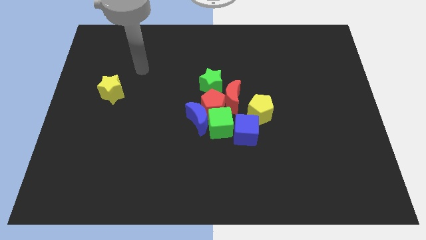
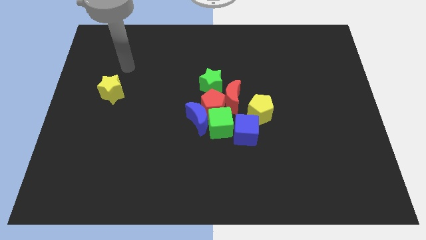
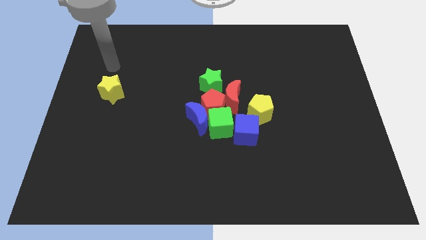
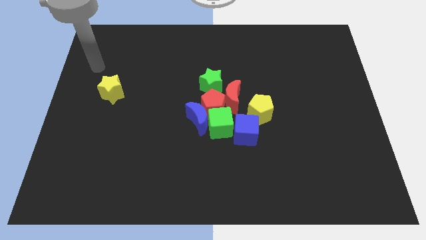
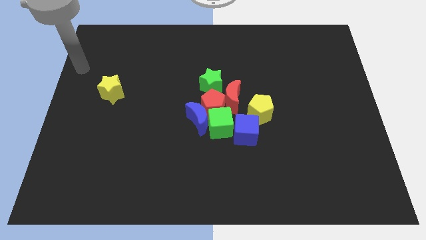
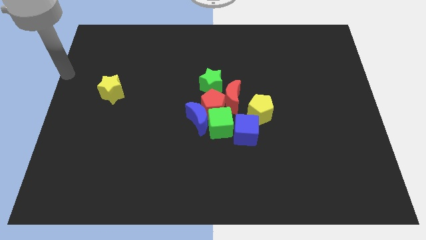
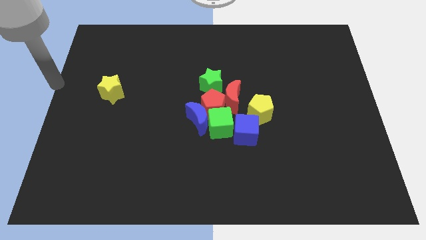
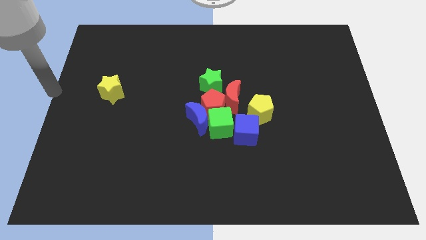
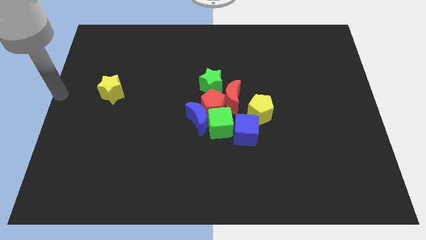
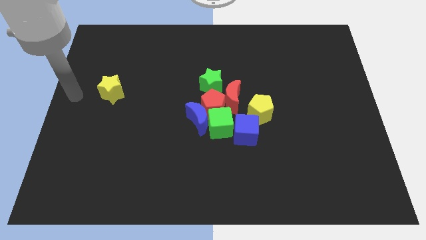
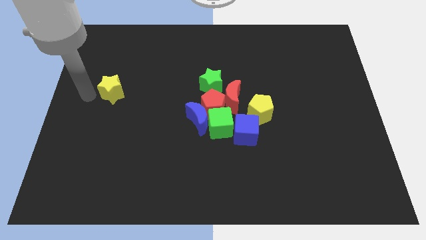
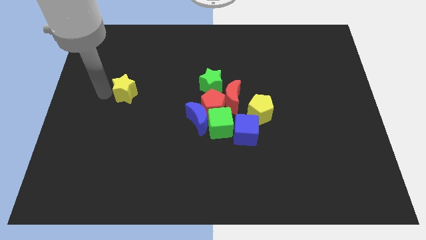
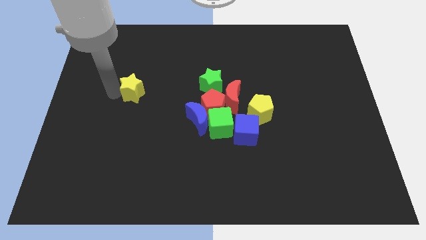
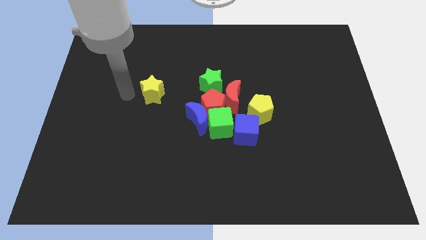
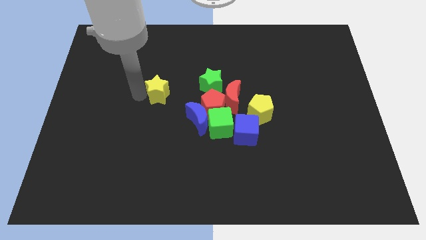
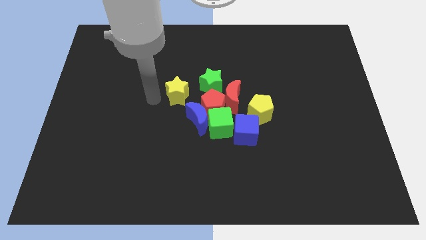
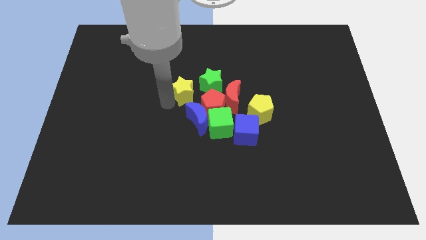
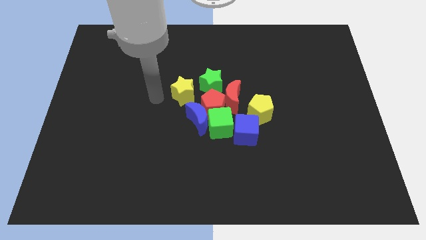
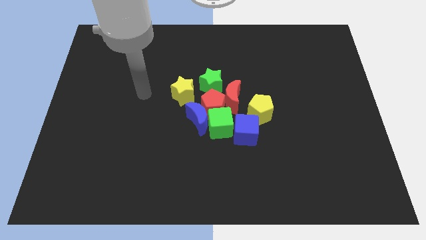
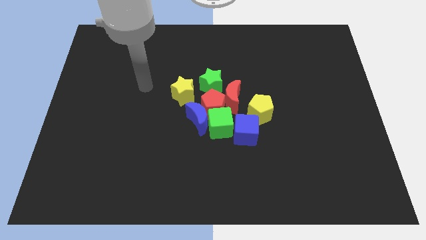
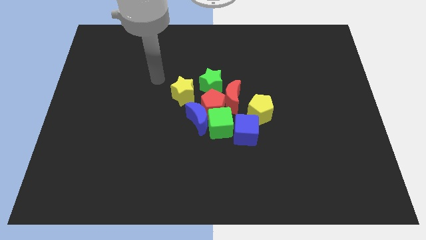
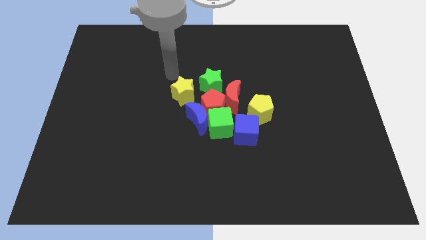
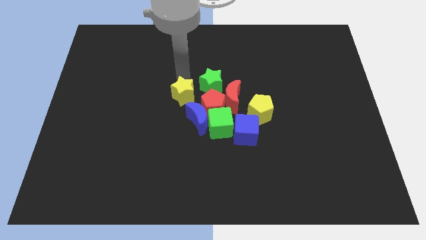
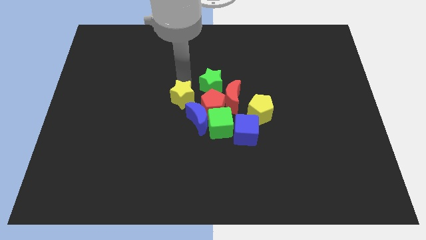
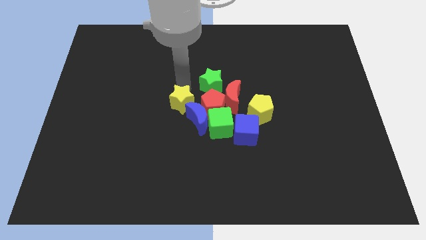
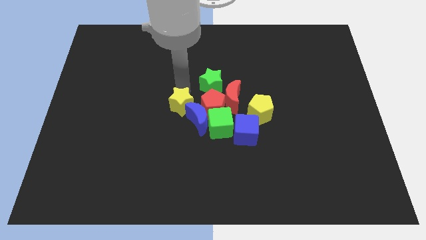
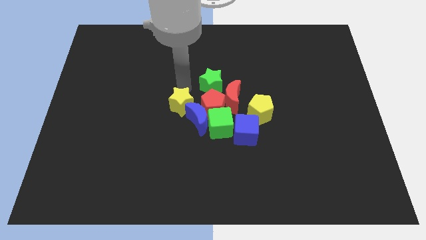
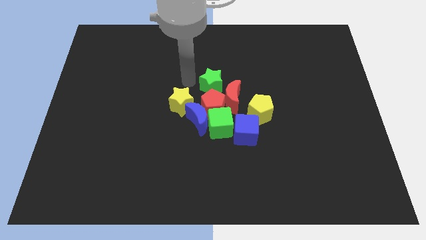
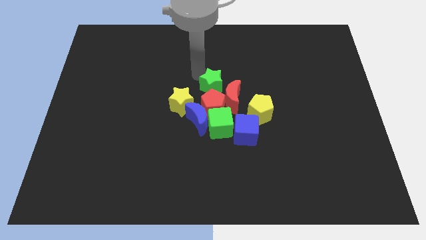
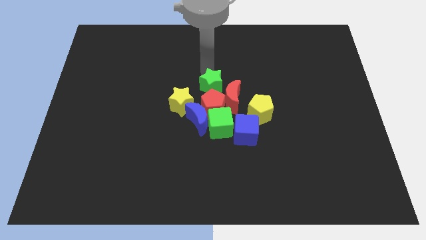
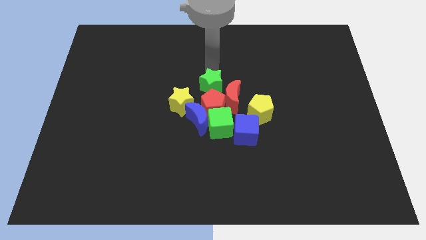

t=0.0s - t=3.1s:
push the yellow star into the group of object

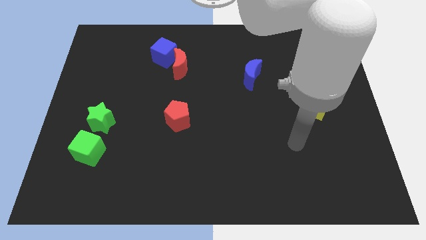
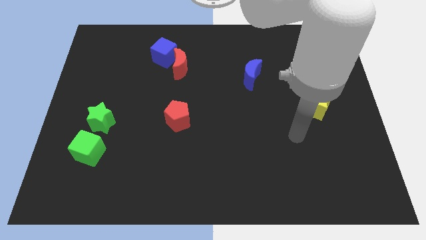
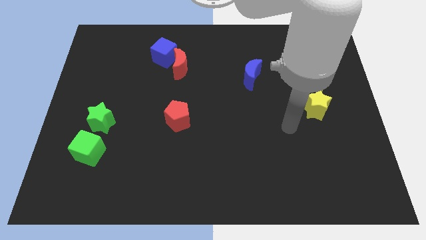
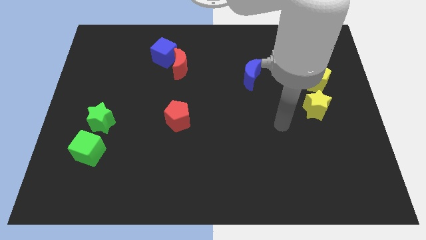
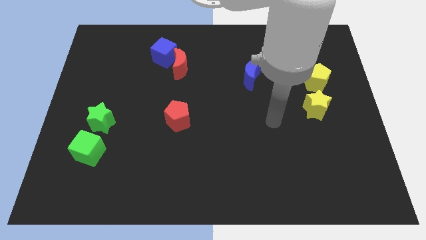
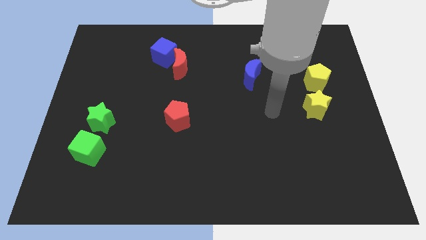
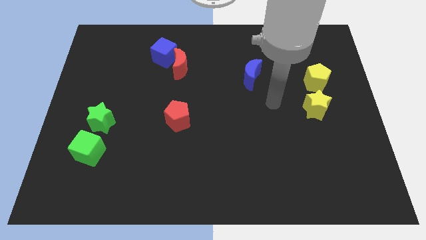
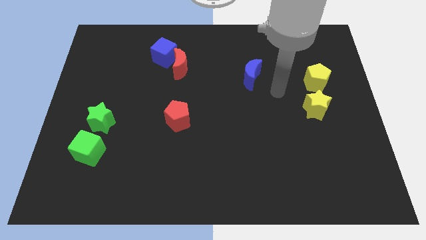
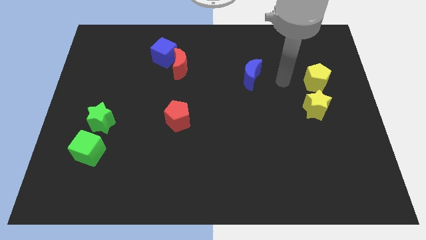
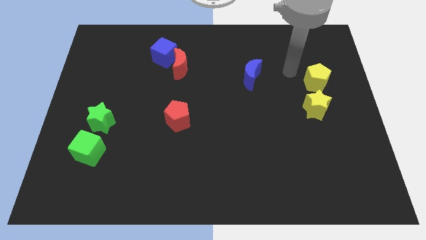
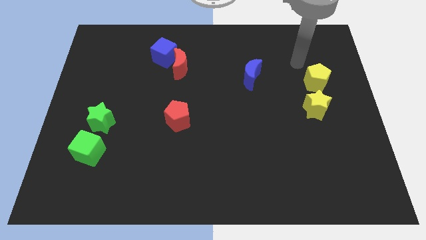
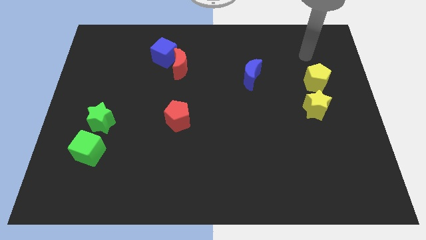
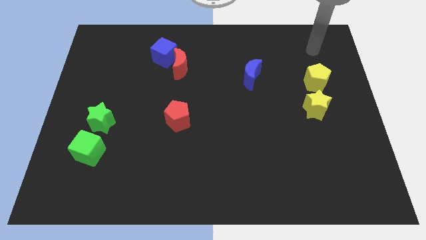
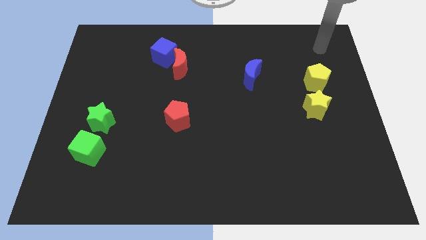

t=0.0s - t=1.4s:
point your arm at the top of the yellow pentagon

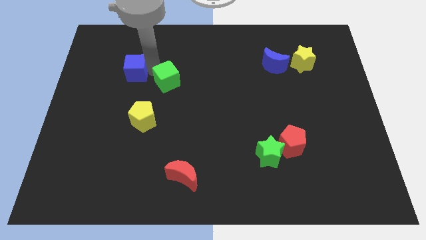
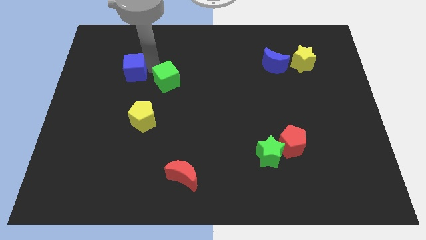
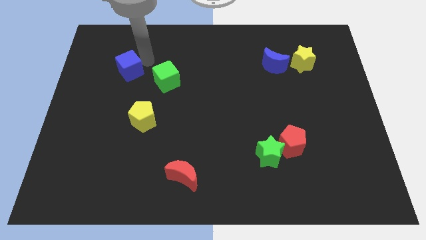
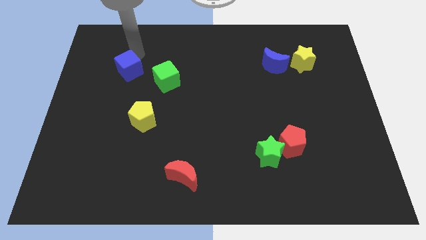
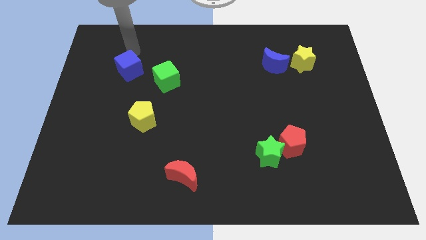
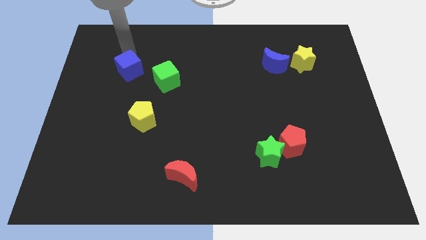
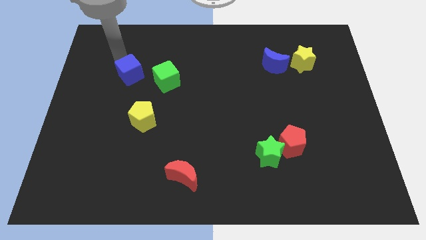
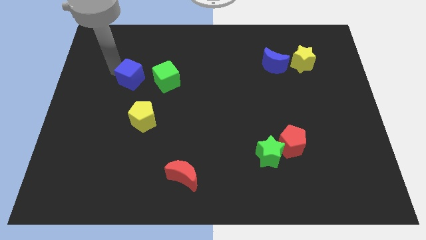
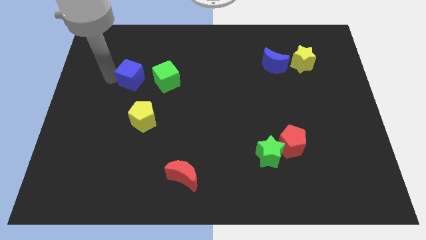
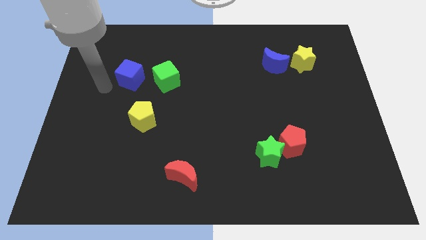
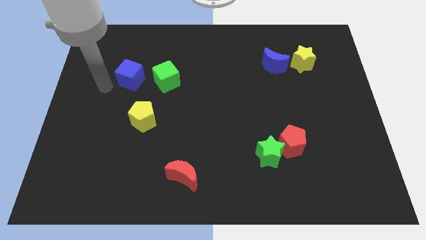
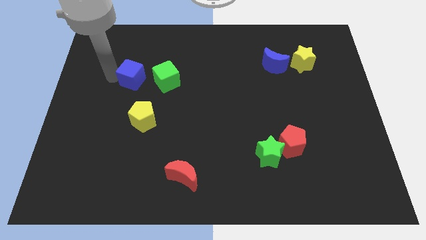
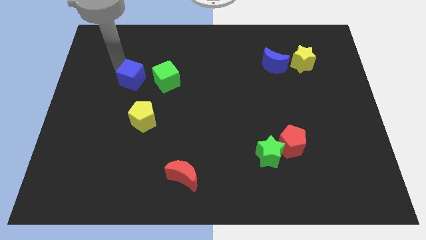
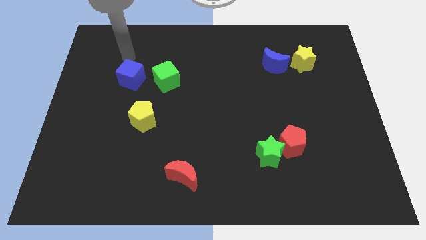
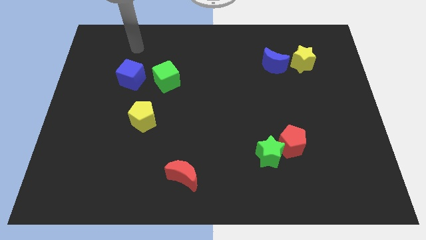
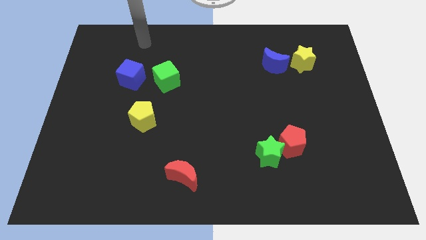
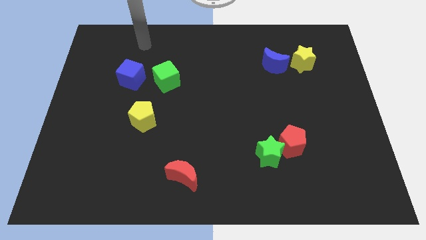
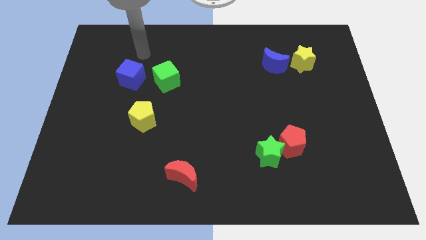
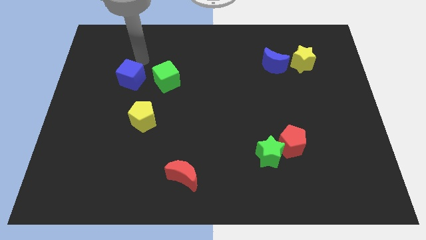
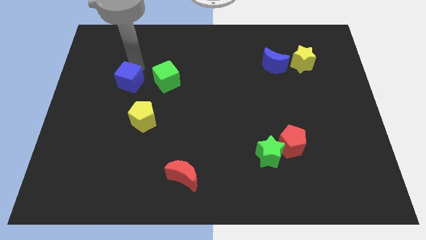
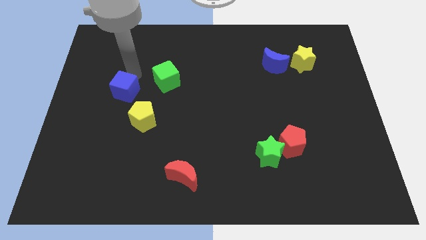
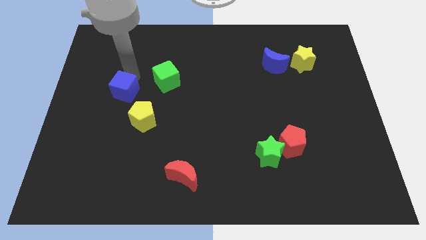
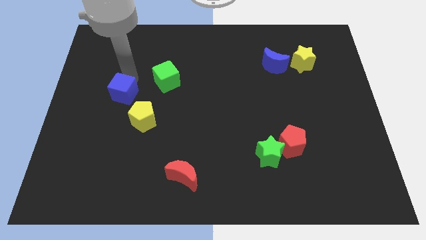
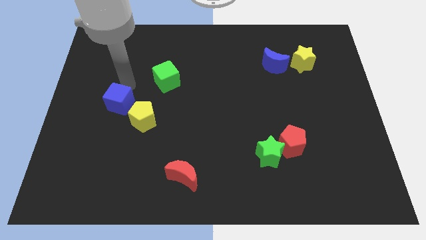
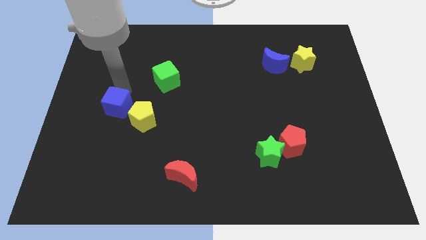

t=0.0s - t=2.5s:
place the blue cube beside the yellow pentagon

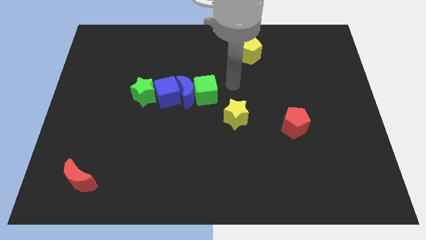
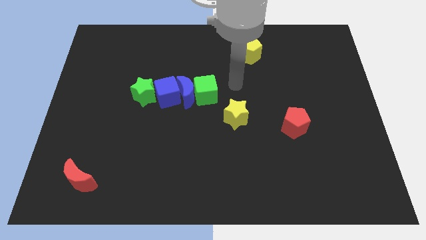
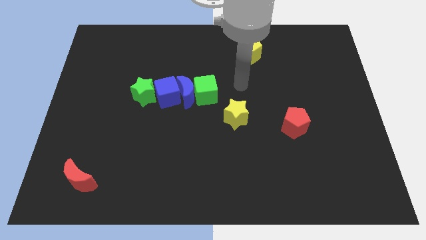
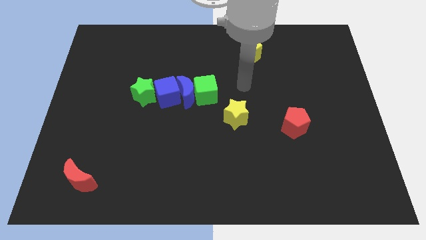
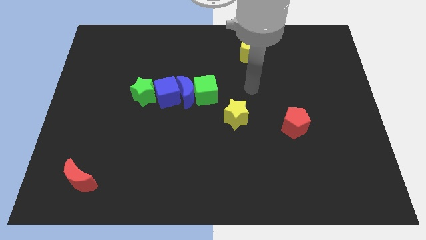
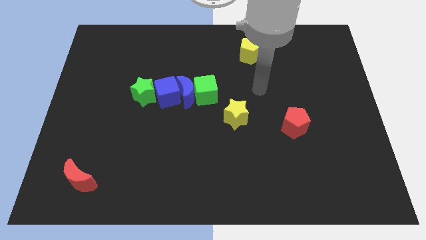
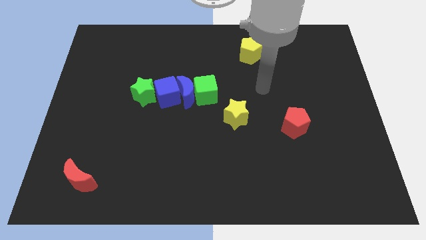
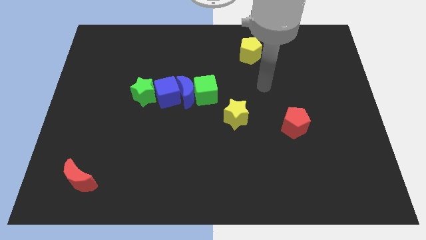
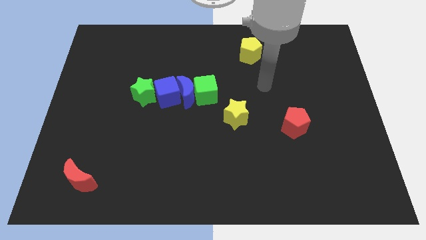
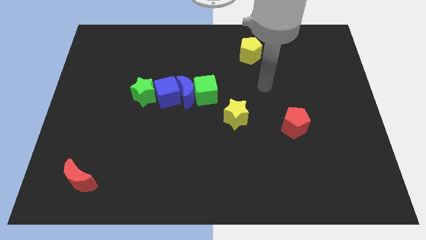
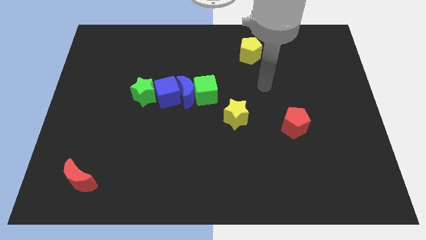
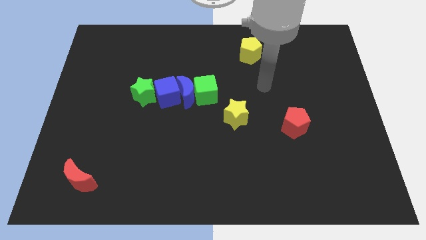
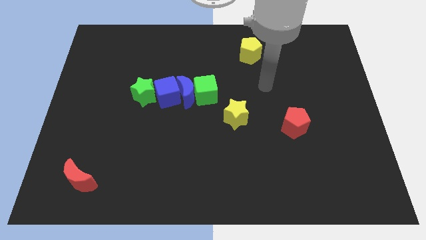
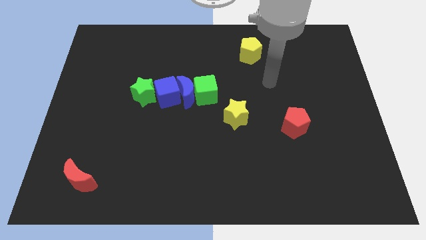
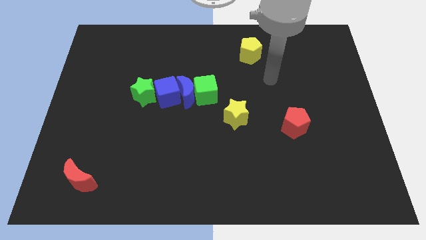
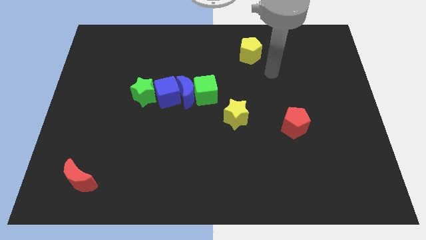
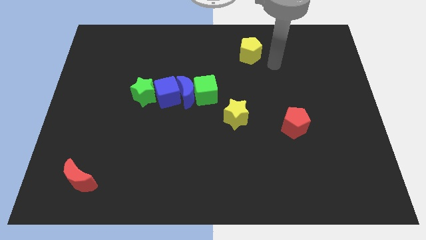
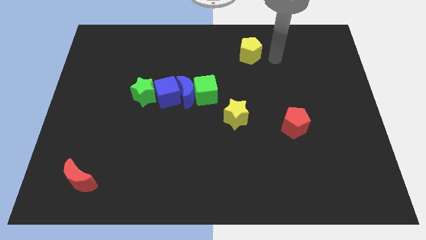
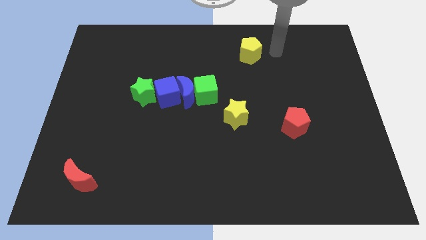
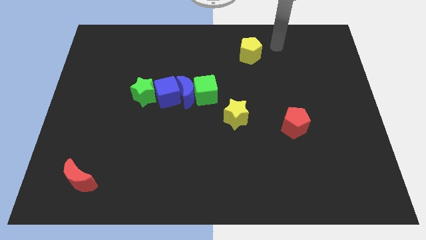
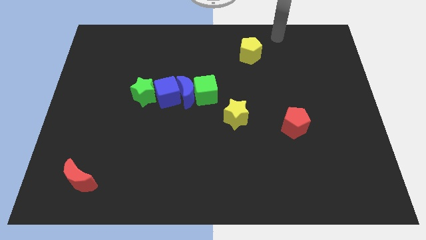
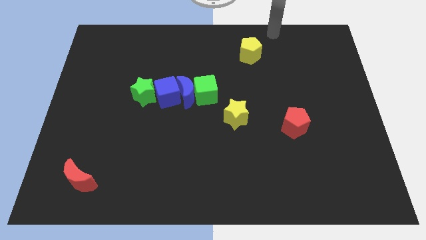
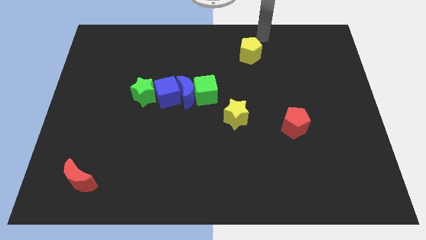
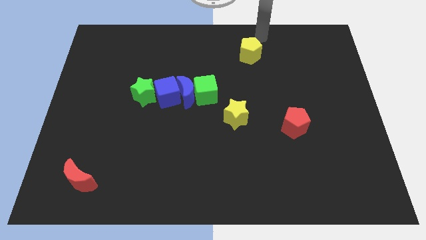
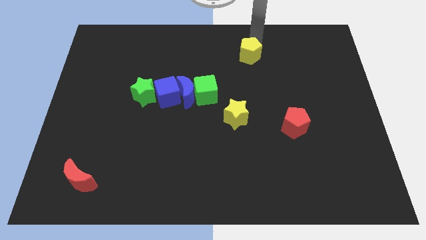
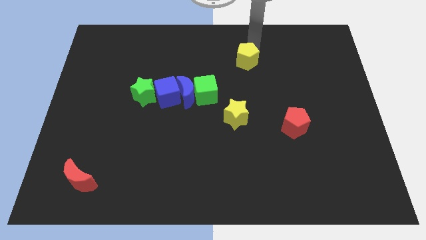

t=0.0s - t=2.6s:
move the pointer to the top of the yellow pentagon
